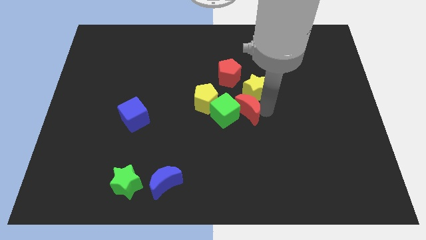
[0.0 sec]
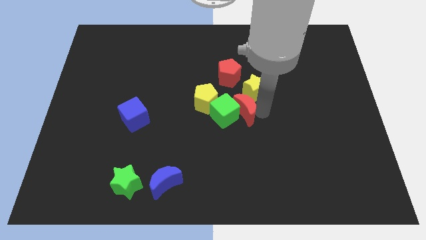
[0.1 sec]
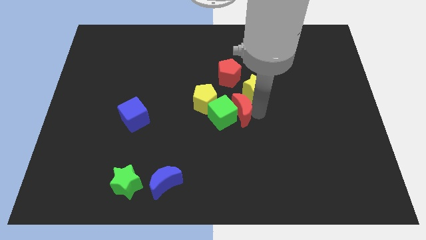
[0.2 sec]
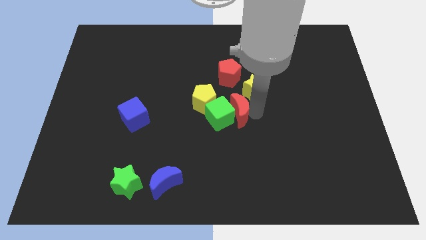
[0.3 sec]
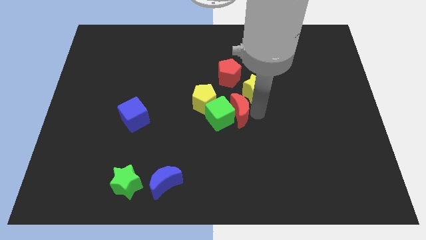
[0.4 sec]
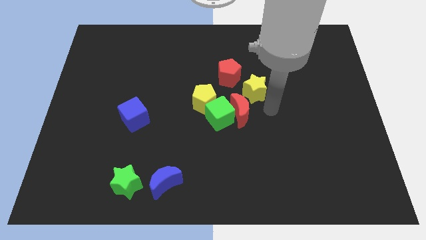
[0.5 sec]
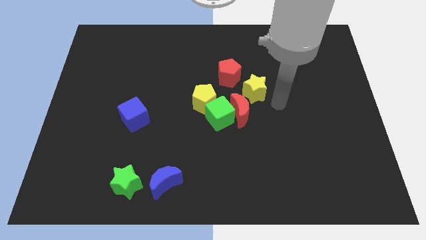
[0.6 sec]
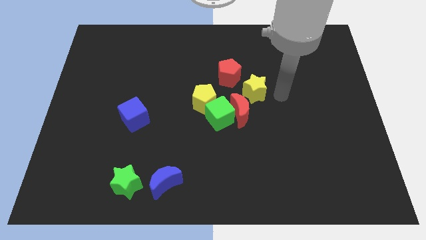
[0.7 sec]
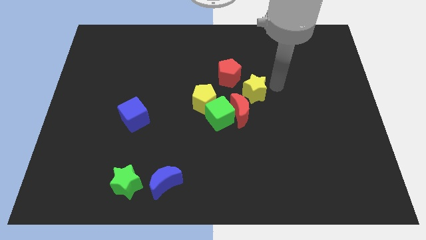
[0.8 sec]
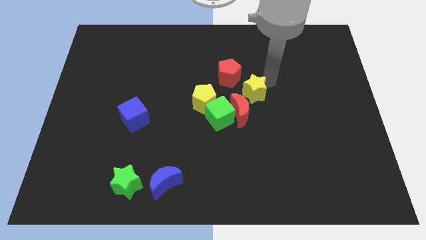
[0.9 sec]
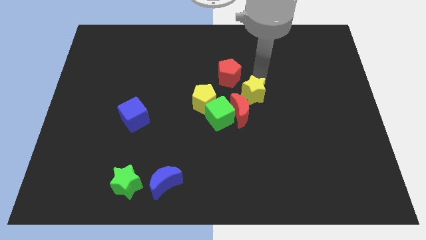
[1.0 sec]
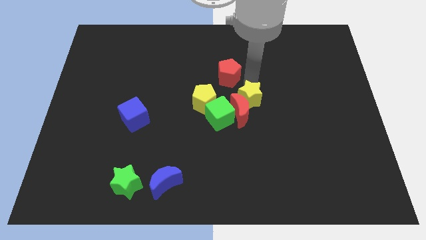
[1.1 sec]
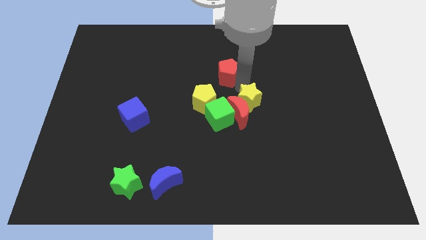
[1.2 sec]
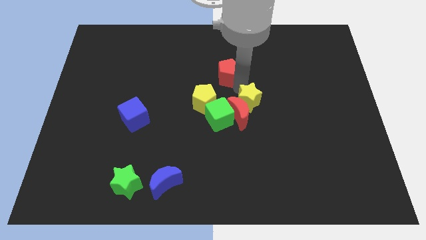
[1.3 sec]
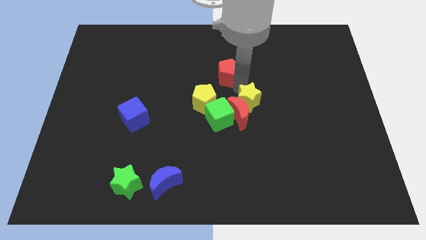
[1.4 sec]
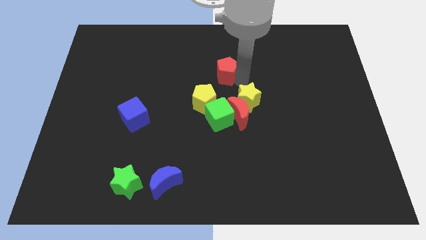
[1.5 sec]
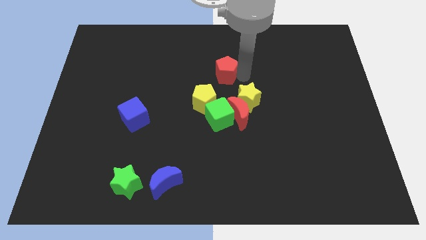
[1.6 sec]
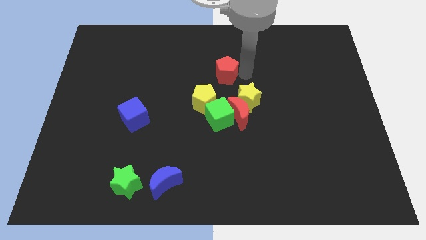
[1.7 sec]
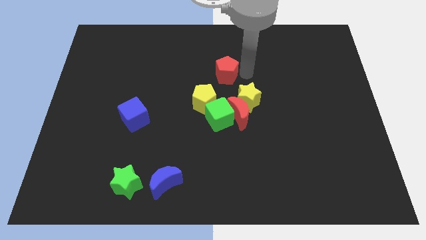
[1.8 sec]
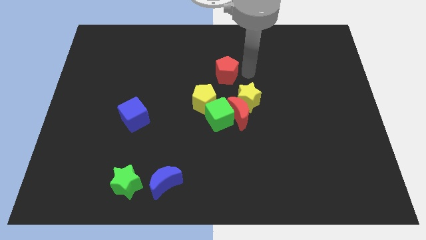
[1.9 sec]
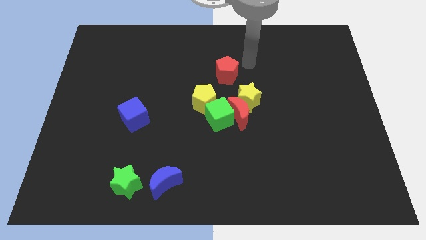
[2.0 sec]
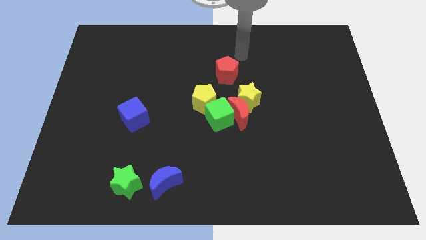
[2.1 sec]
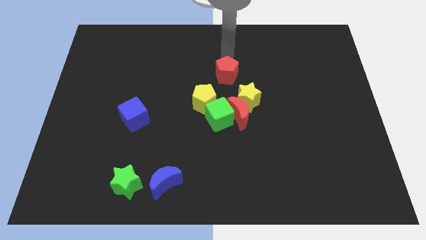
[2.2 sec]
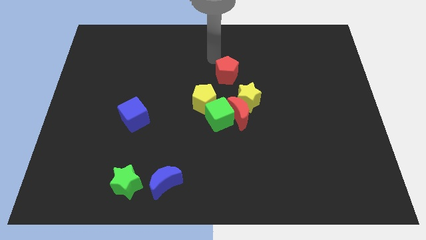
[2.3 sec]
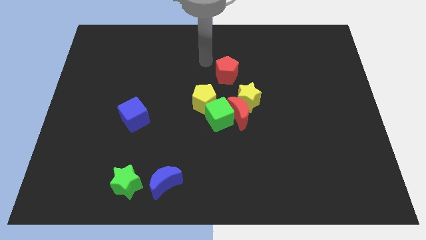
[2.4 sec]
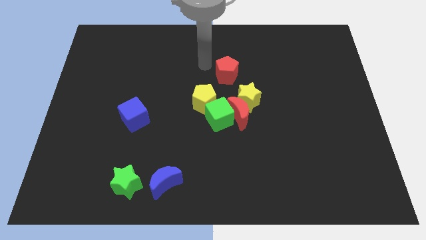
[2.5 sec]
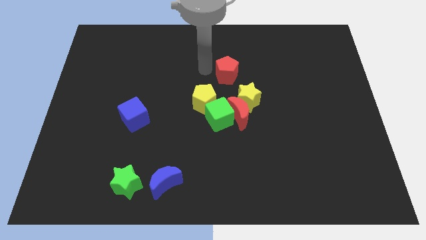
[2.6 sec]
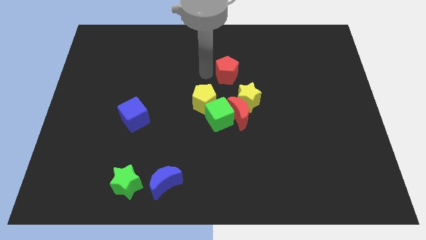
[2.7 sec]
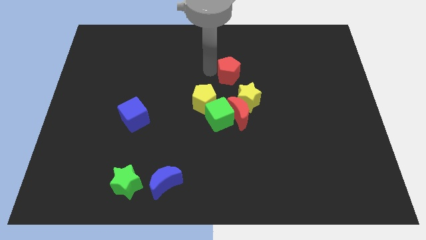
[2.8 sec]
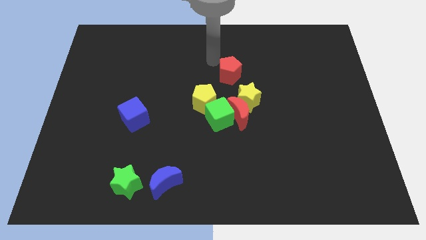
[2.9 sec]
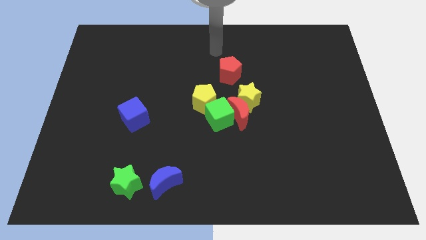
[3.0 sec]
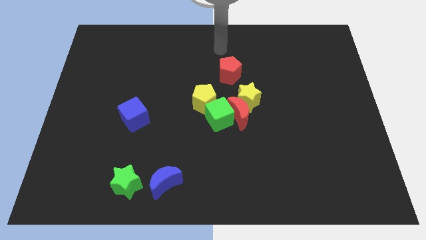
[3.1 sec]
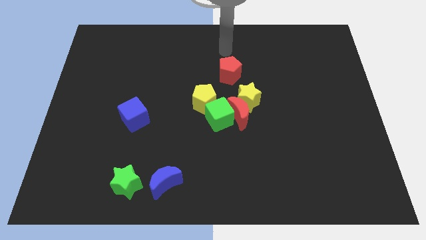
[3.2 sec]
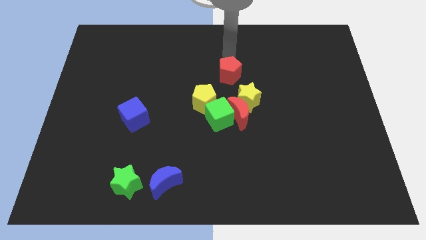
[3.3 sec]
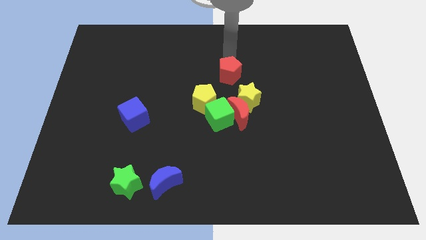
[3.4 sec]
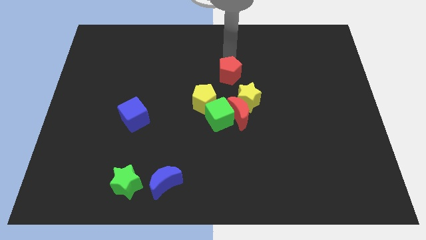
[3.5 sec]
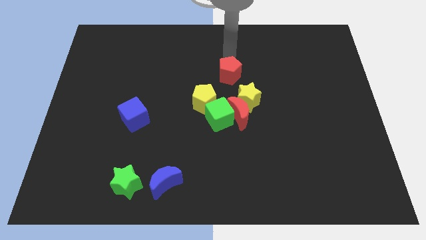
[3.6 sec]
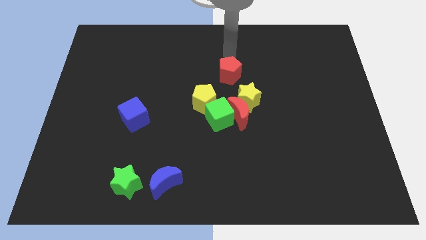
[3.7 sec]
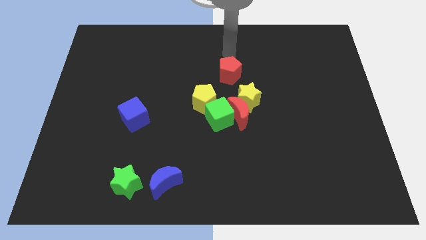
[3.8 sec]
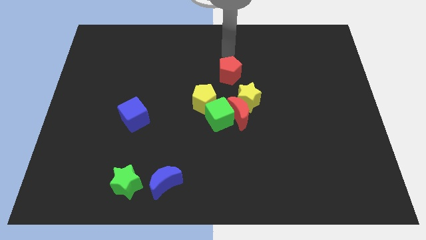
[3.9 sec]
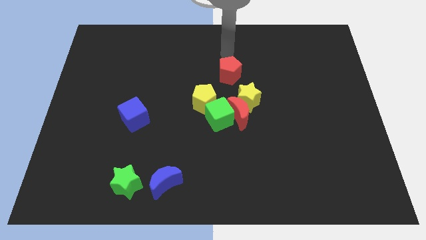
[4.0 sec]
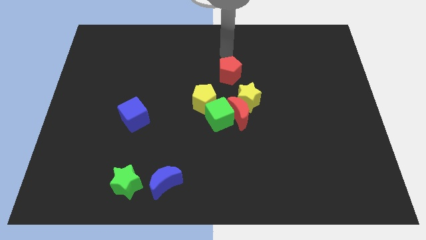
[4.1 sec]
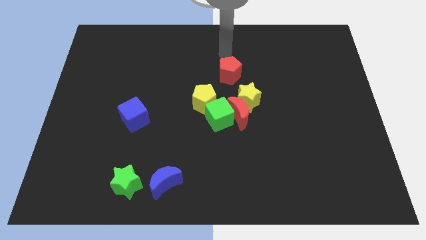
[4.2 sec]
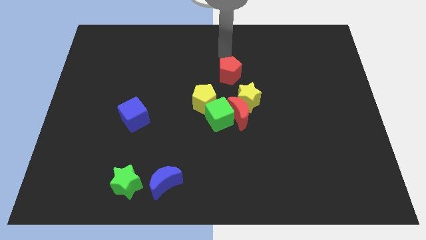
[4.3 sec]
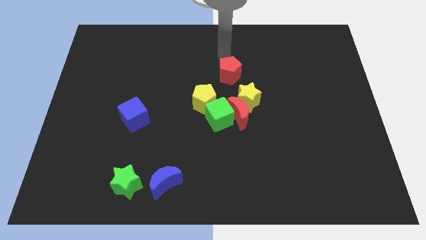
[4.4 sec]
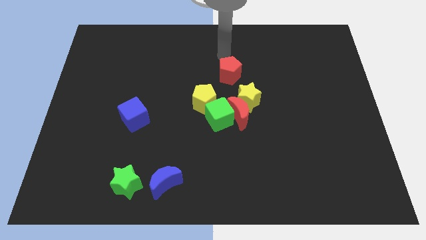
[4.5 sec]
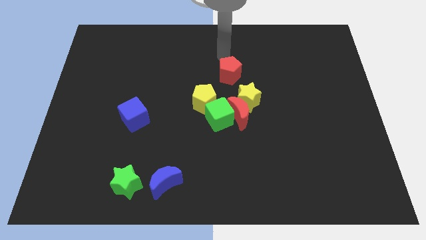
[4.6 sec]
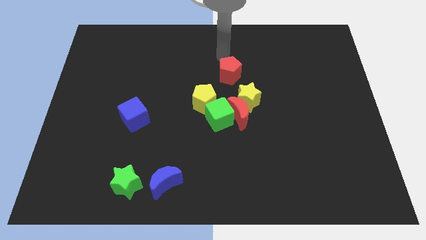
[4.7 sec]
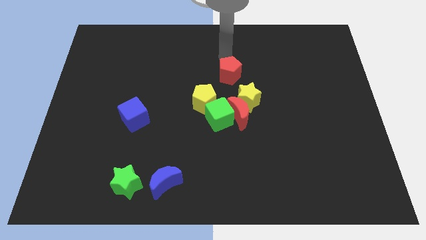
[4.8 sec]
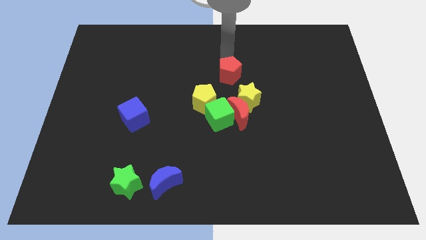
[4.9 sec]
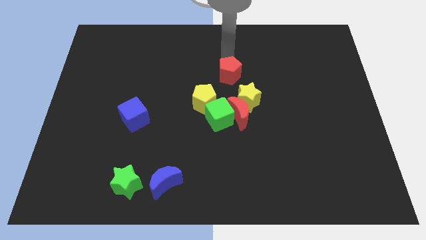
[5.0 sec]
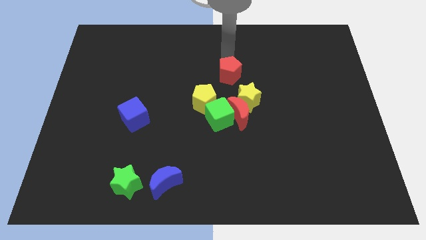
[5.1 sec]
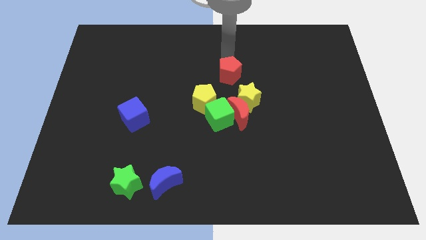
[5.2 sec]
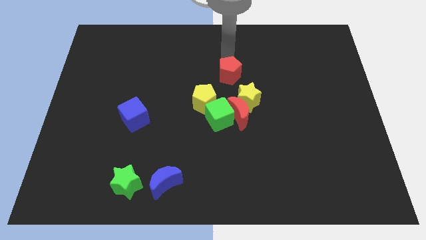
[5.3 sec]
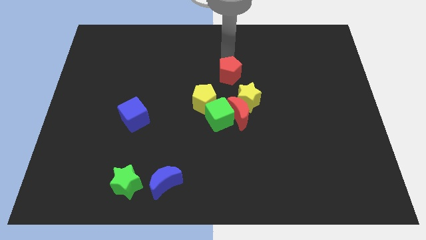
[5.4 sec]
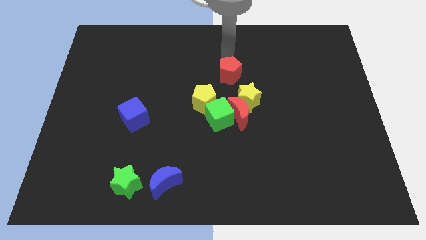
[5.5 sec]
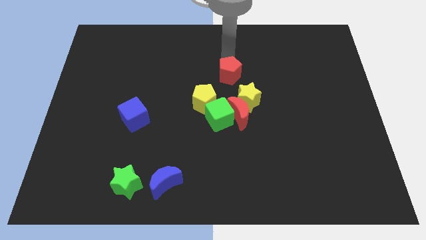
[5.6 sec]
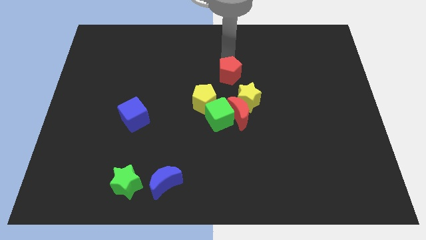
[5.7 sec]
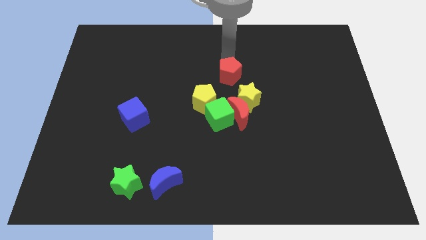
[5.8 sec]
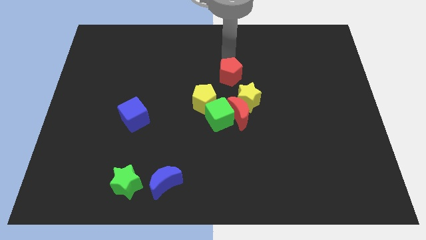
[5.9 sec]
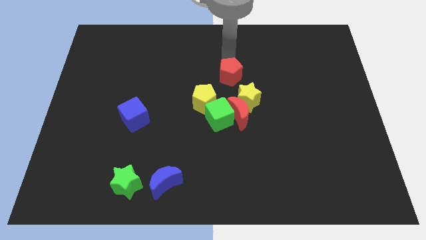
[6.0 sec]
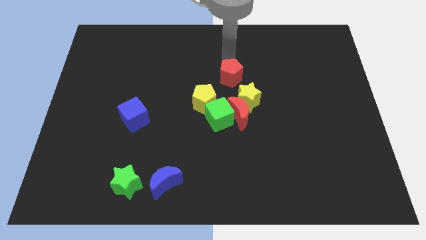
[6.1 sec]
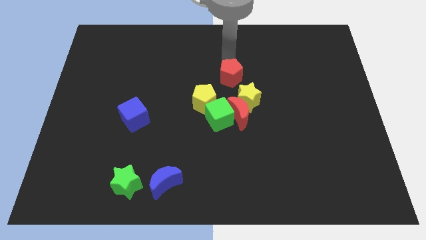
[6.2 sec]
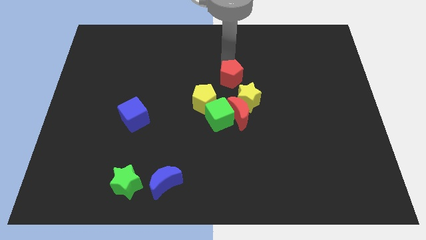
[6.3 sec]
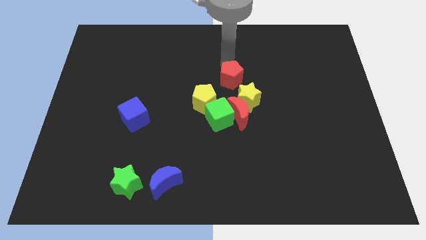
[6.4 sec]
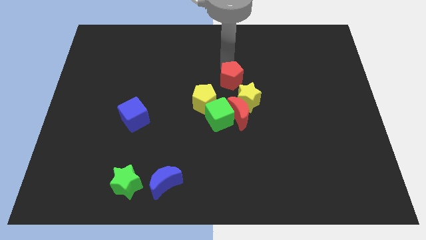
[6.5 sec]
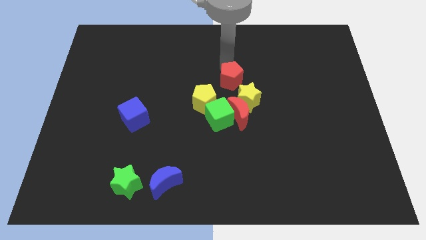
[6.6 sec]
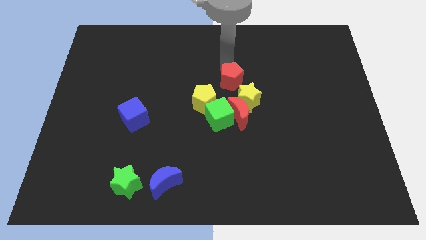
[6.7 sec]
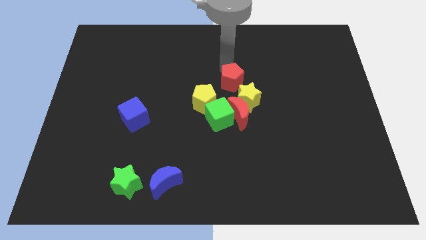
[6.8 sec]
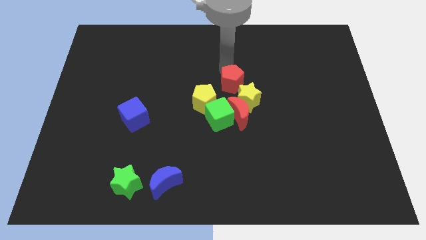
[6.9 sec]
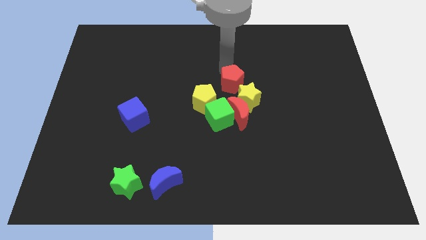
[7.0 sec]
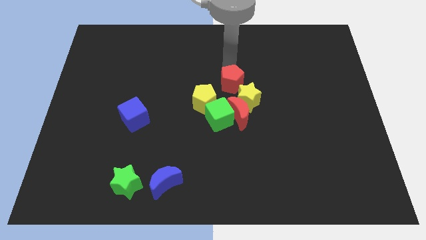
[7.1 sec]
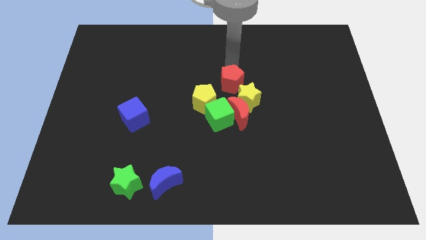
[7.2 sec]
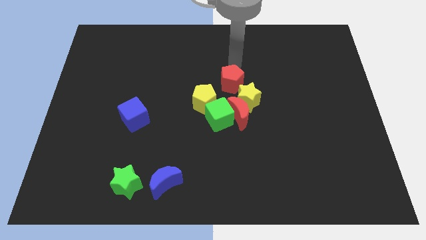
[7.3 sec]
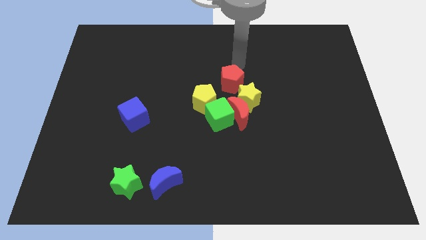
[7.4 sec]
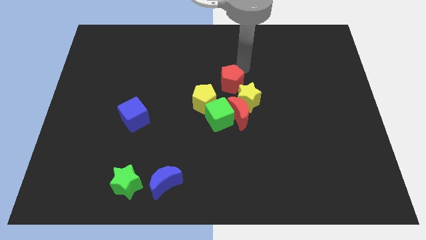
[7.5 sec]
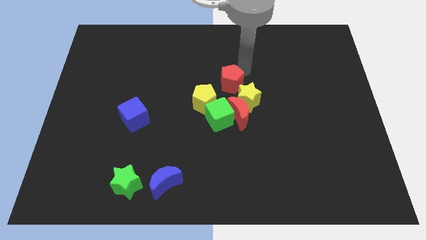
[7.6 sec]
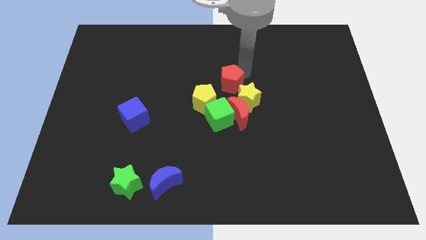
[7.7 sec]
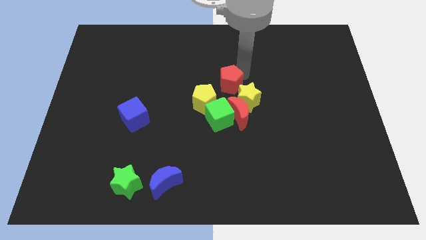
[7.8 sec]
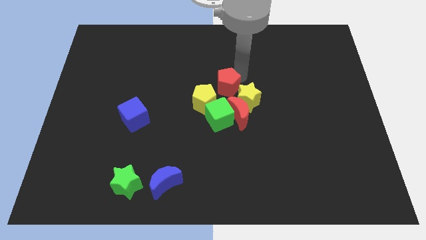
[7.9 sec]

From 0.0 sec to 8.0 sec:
place the red pentagon above the red crescent

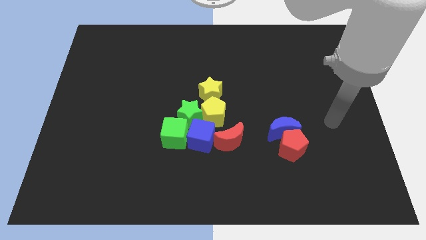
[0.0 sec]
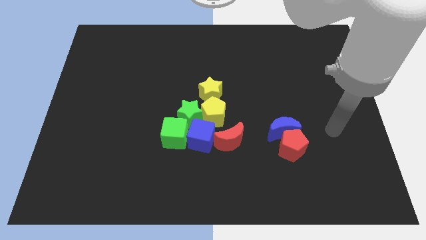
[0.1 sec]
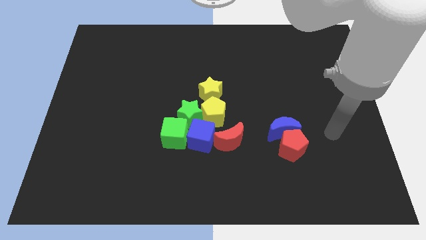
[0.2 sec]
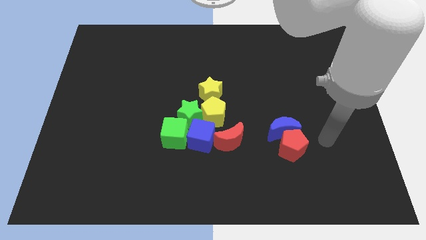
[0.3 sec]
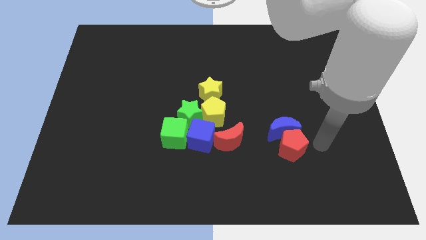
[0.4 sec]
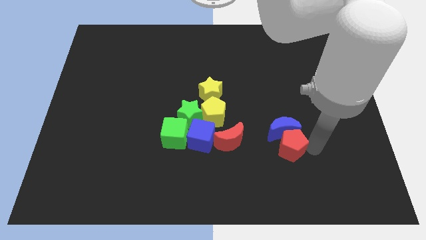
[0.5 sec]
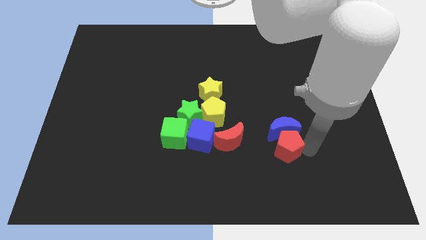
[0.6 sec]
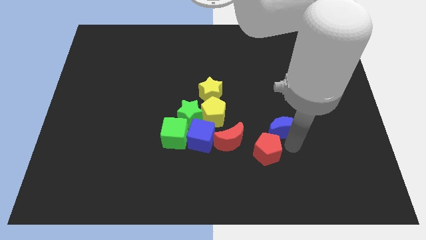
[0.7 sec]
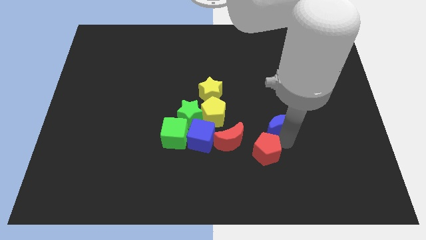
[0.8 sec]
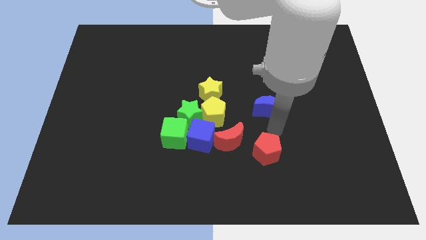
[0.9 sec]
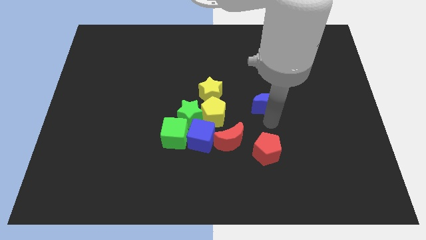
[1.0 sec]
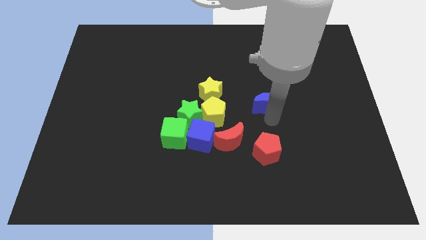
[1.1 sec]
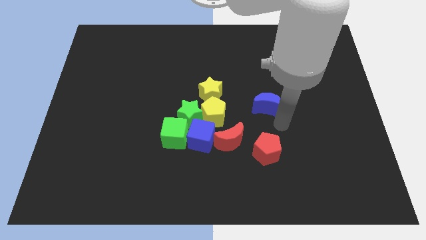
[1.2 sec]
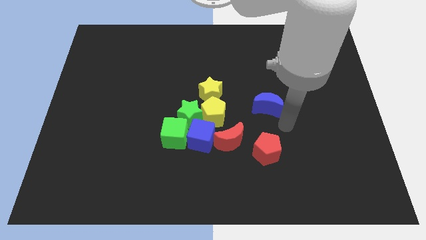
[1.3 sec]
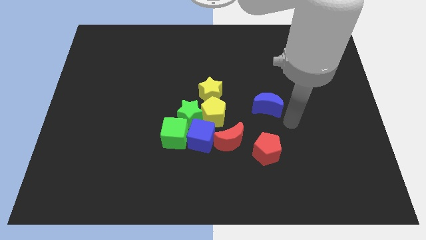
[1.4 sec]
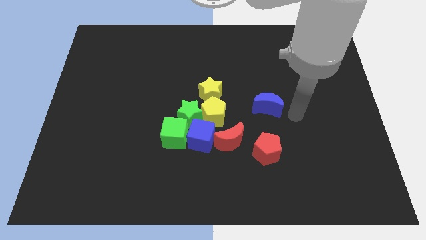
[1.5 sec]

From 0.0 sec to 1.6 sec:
separate the blue moon and red pentagon
